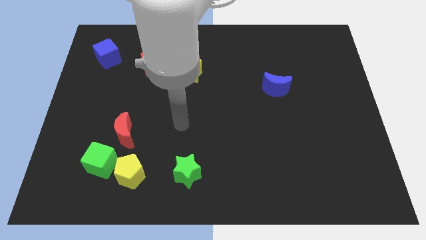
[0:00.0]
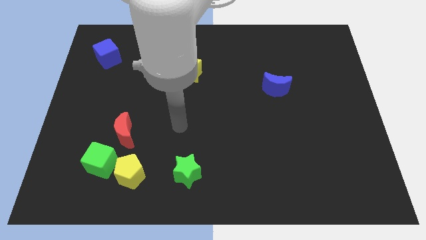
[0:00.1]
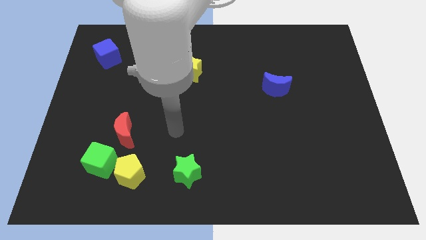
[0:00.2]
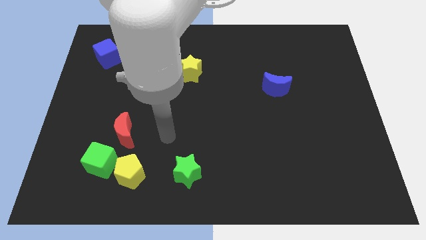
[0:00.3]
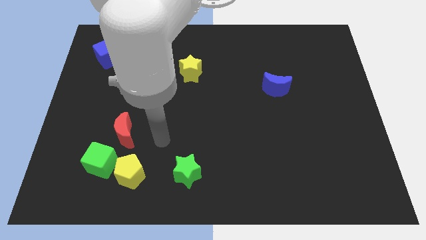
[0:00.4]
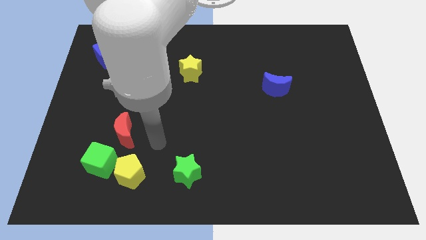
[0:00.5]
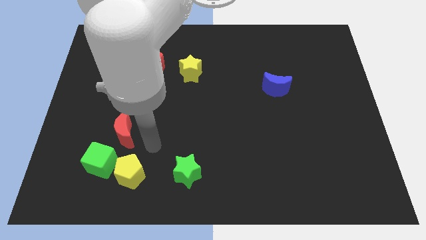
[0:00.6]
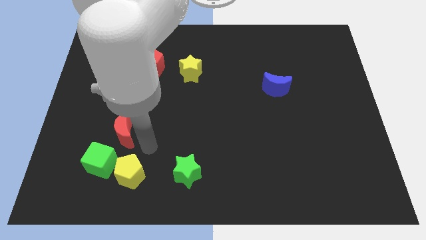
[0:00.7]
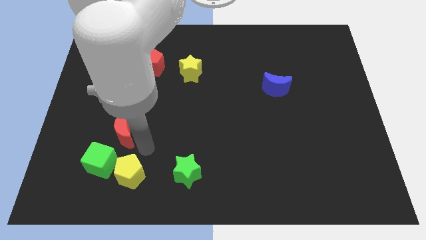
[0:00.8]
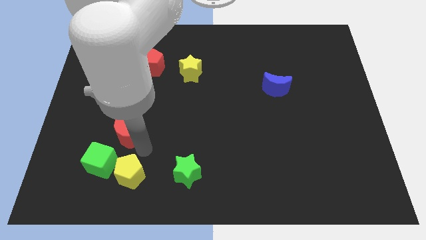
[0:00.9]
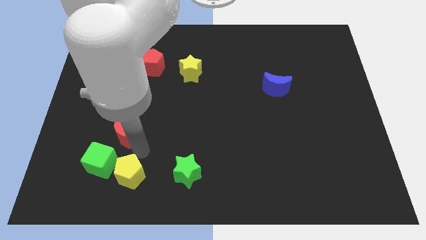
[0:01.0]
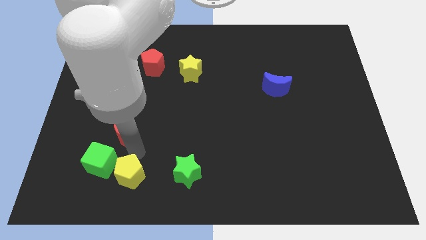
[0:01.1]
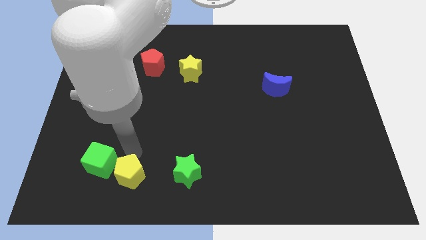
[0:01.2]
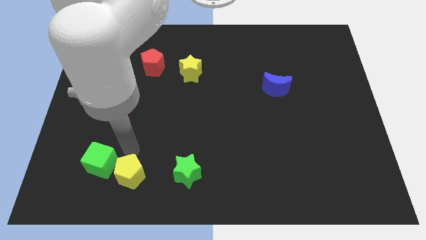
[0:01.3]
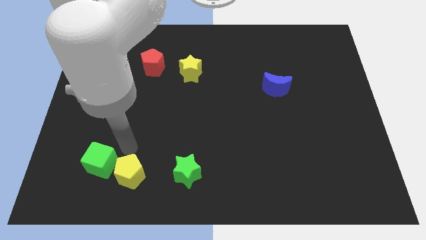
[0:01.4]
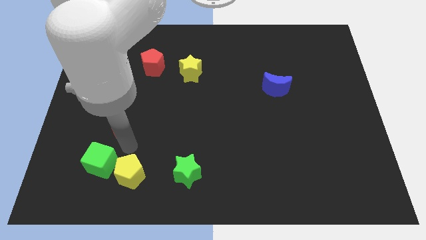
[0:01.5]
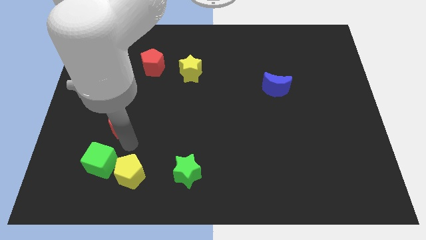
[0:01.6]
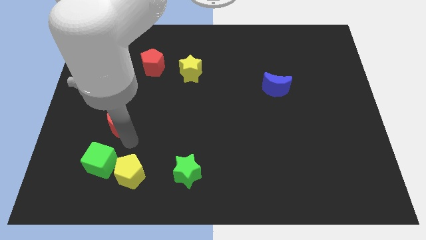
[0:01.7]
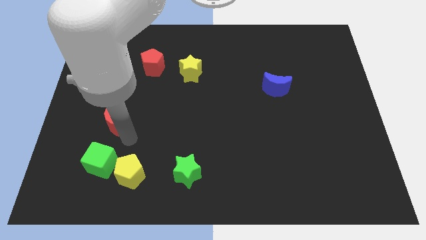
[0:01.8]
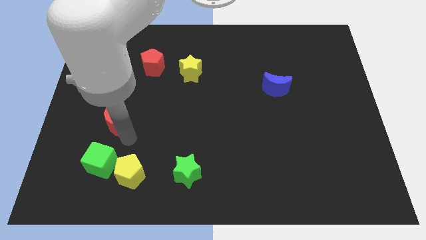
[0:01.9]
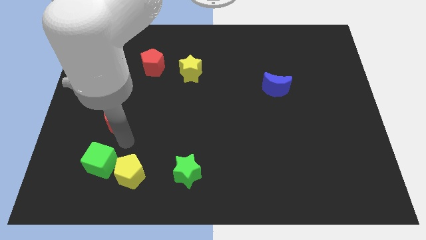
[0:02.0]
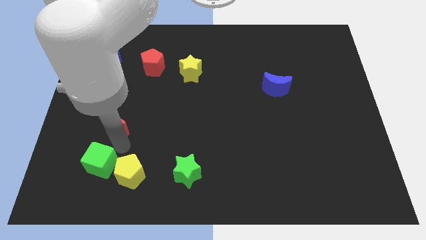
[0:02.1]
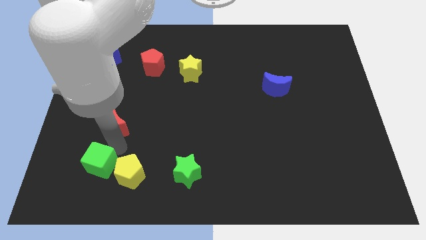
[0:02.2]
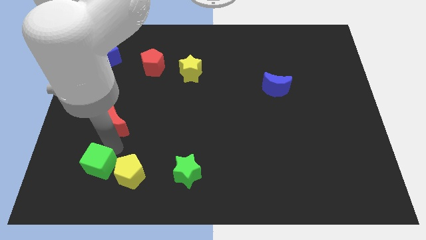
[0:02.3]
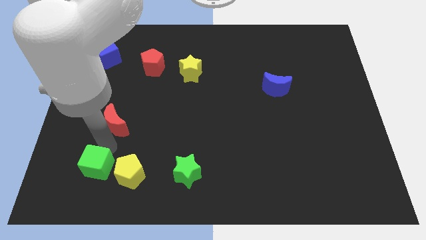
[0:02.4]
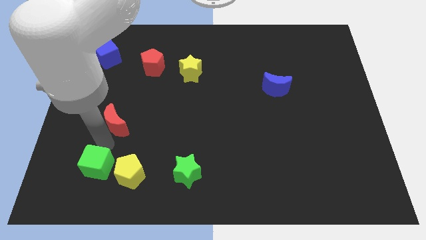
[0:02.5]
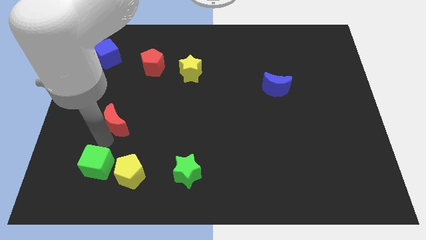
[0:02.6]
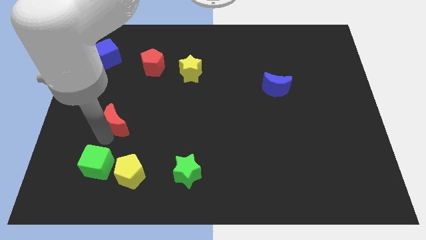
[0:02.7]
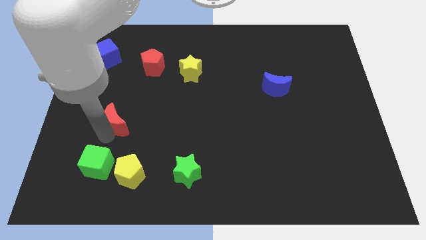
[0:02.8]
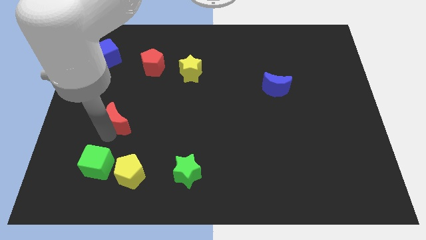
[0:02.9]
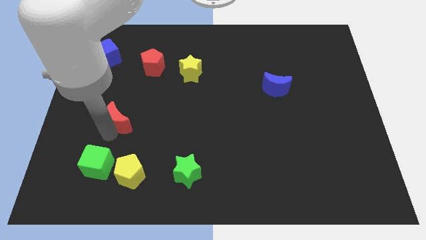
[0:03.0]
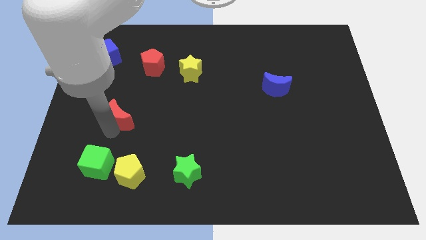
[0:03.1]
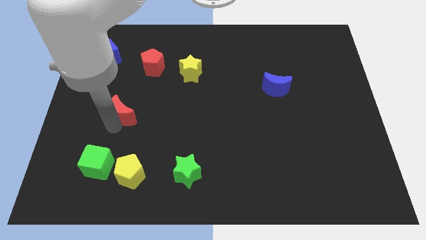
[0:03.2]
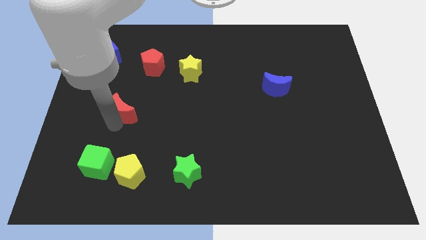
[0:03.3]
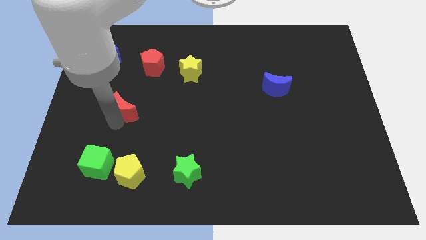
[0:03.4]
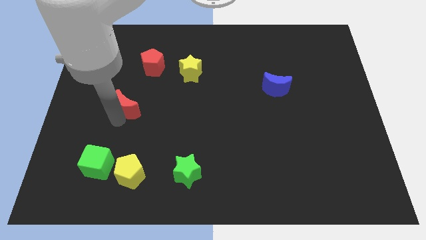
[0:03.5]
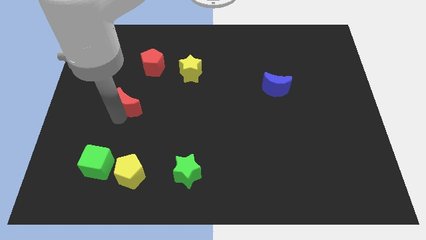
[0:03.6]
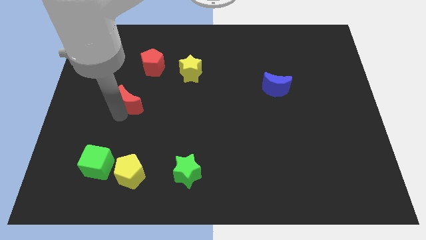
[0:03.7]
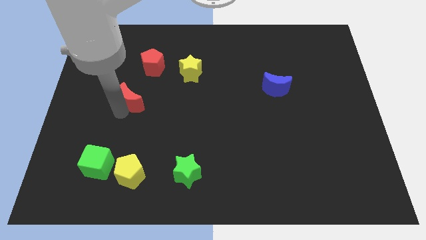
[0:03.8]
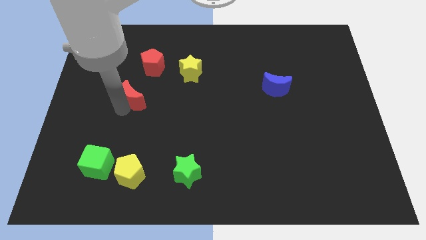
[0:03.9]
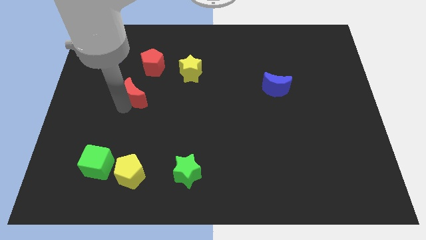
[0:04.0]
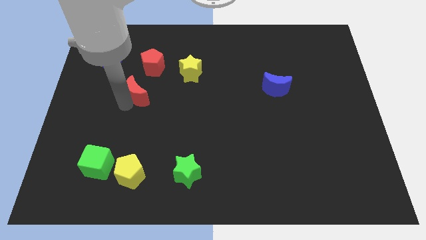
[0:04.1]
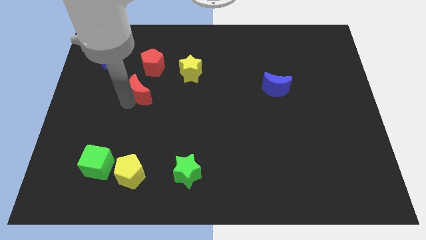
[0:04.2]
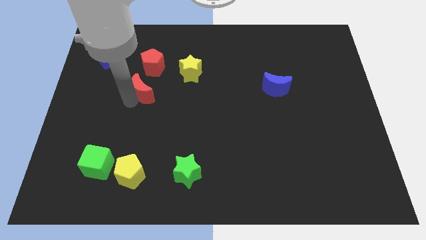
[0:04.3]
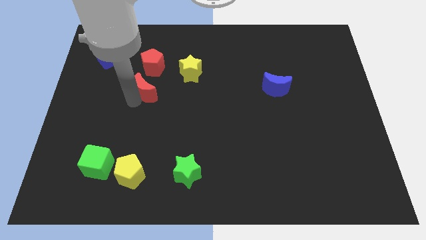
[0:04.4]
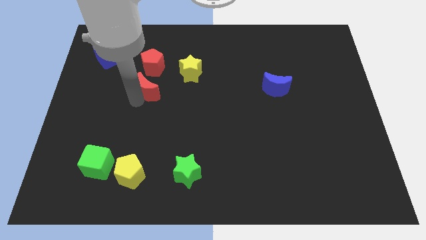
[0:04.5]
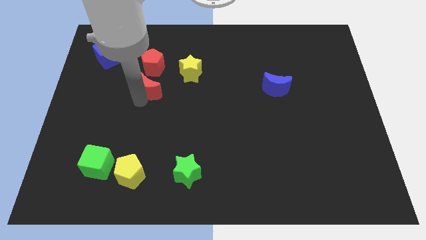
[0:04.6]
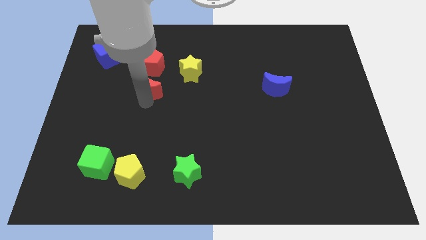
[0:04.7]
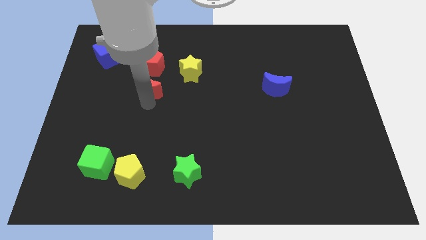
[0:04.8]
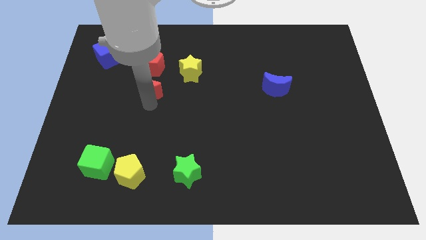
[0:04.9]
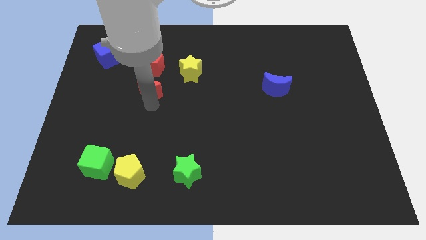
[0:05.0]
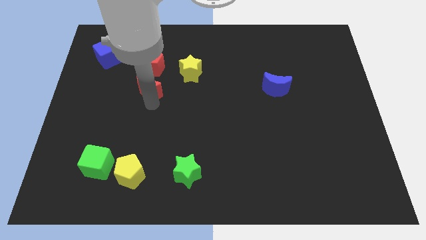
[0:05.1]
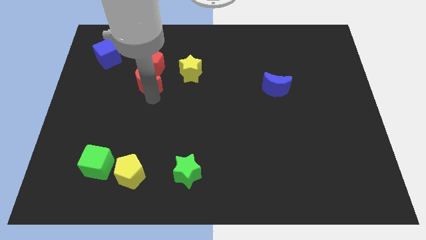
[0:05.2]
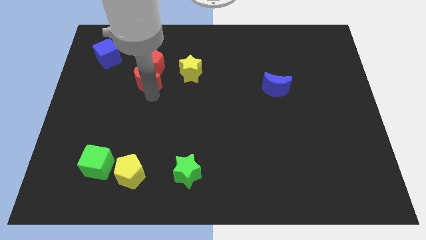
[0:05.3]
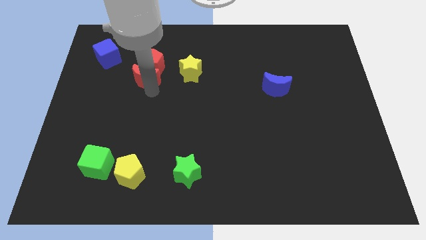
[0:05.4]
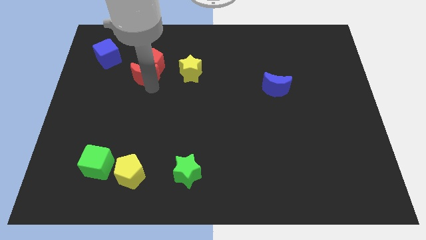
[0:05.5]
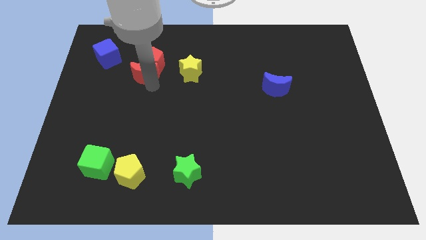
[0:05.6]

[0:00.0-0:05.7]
slide the red moon to the red pentagon

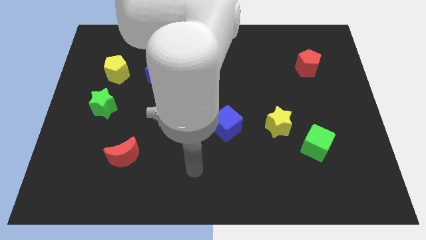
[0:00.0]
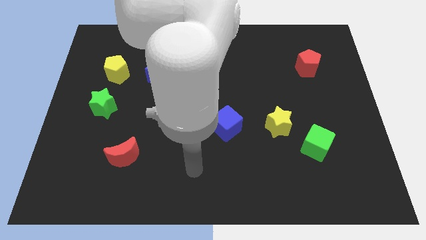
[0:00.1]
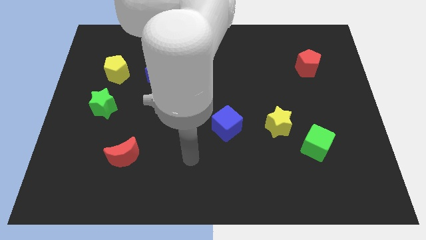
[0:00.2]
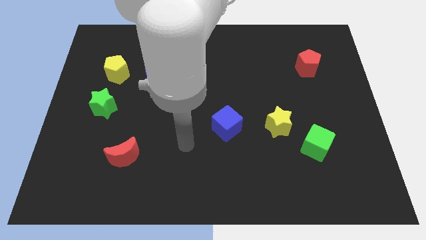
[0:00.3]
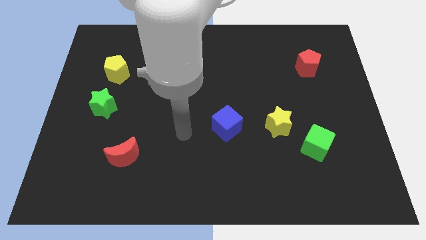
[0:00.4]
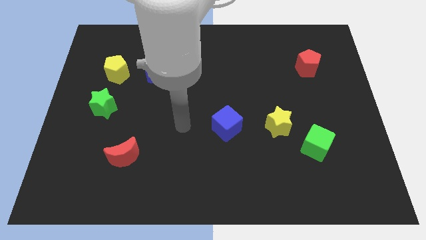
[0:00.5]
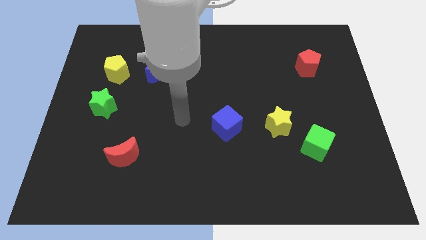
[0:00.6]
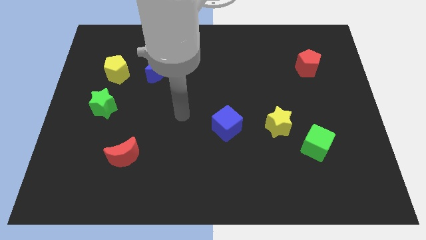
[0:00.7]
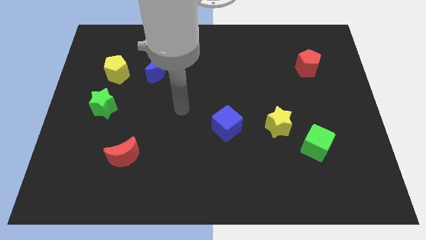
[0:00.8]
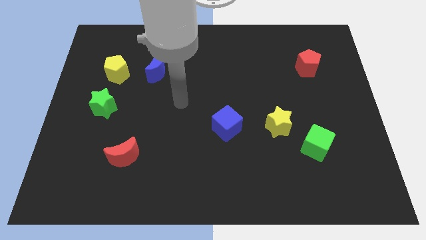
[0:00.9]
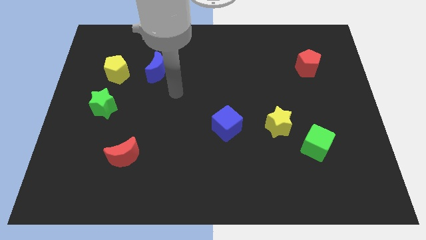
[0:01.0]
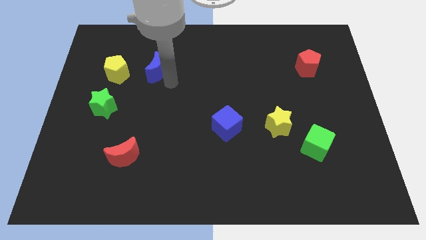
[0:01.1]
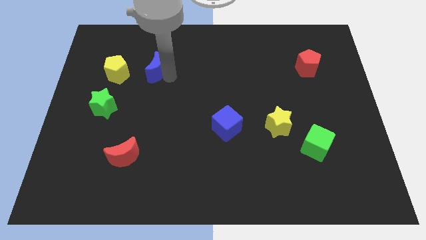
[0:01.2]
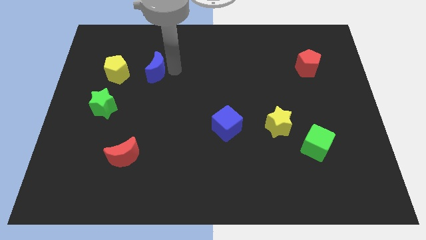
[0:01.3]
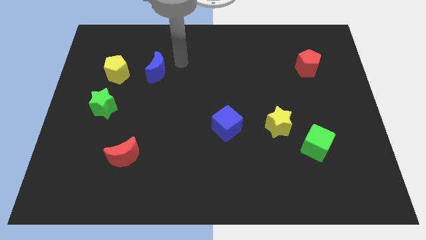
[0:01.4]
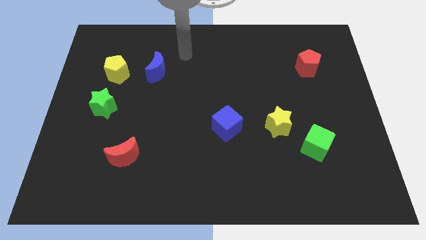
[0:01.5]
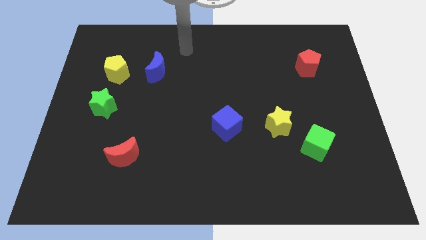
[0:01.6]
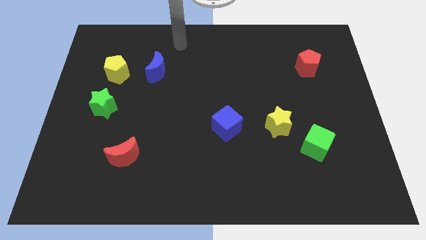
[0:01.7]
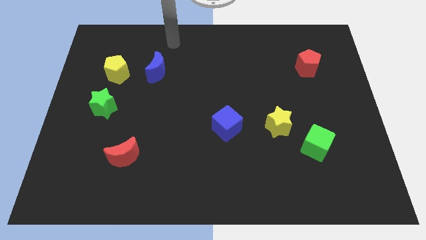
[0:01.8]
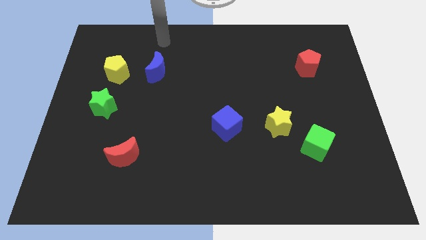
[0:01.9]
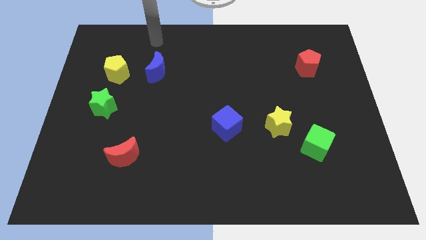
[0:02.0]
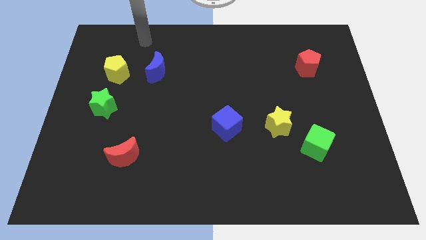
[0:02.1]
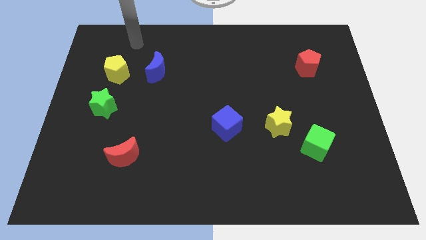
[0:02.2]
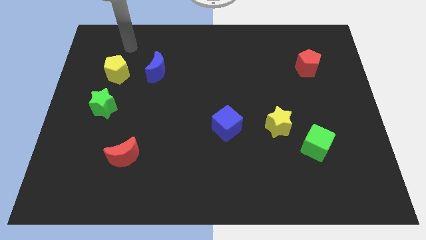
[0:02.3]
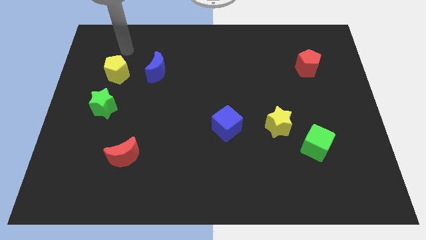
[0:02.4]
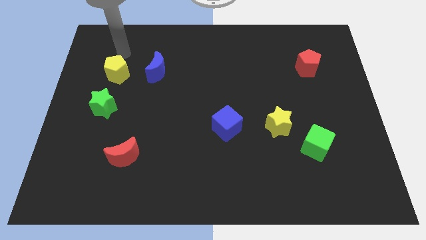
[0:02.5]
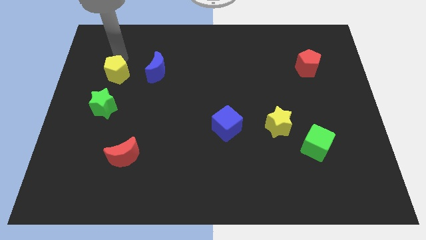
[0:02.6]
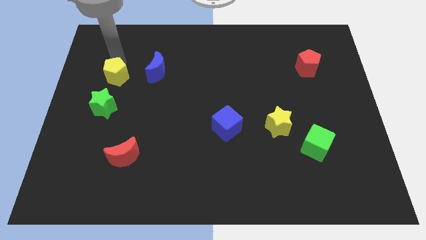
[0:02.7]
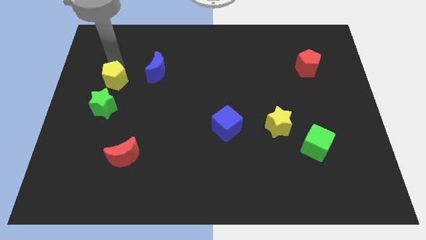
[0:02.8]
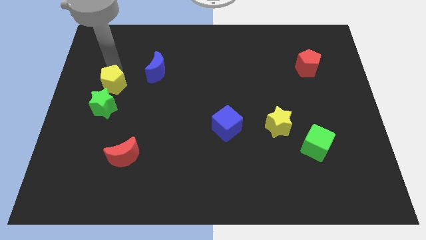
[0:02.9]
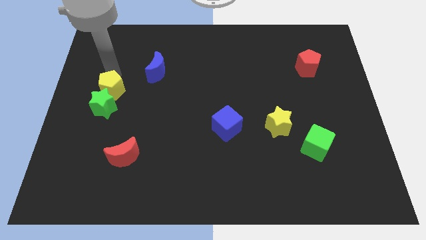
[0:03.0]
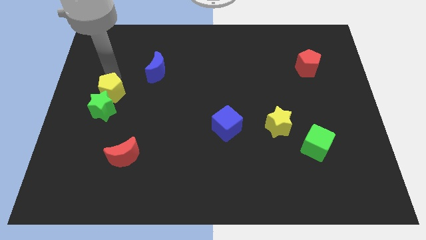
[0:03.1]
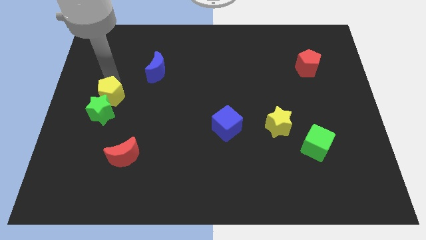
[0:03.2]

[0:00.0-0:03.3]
push the yellow pentagon close to the green star
